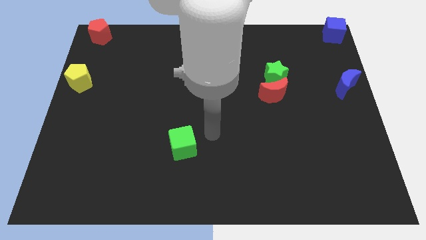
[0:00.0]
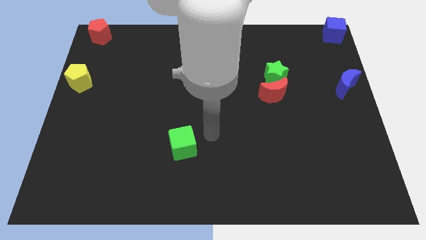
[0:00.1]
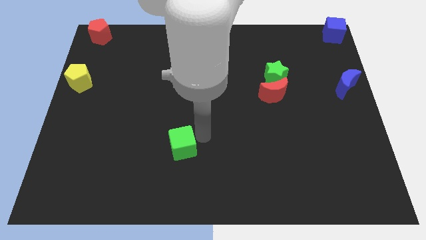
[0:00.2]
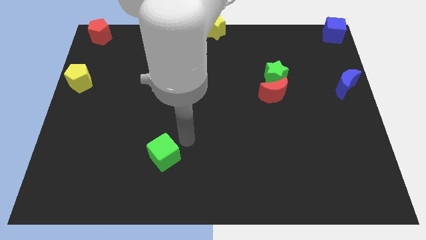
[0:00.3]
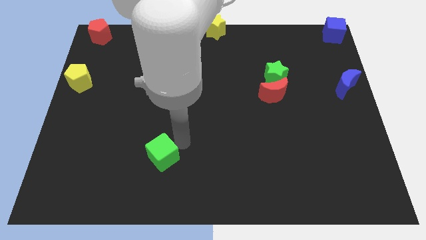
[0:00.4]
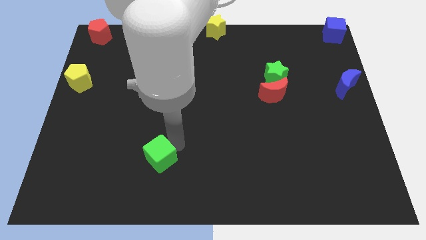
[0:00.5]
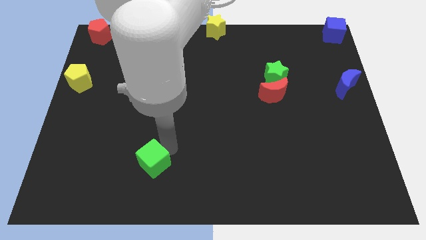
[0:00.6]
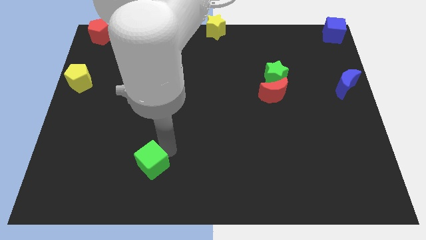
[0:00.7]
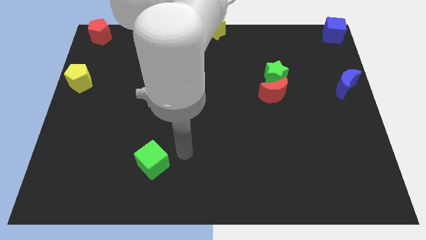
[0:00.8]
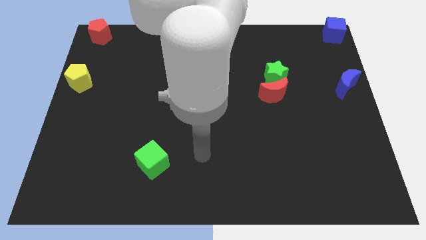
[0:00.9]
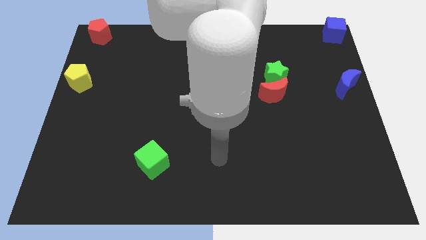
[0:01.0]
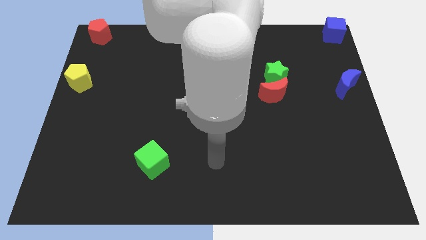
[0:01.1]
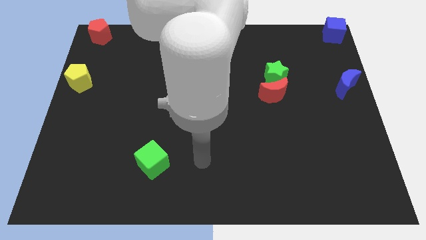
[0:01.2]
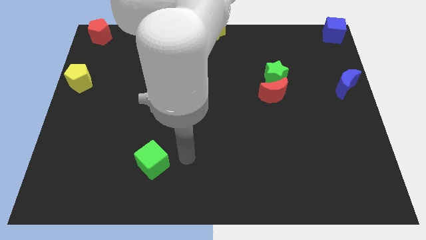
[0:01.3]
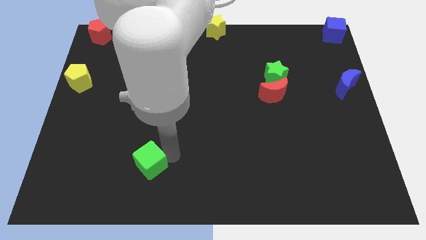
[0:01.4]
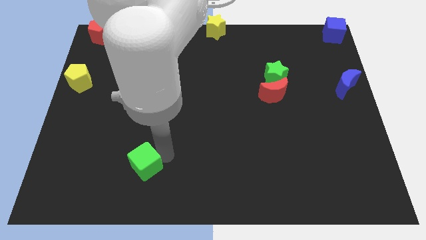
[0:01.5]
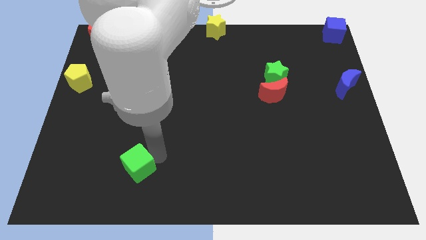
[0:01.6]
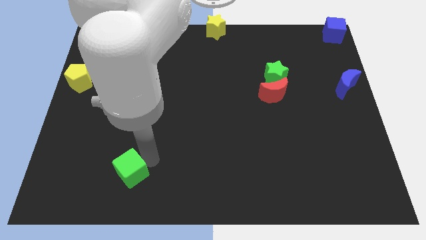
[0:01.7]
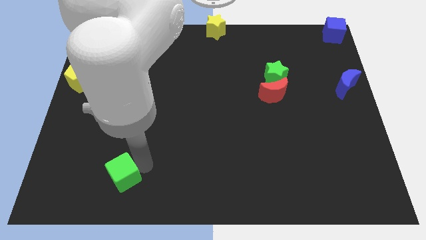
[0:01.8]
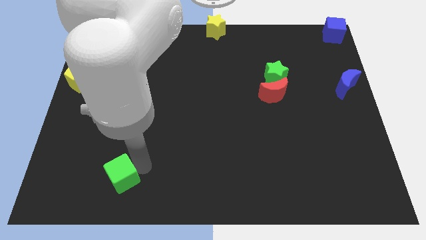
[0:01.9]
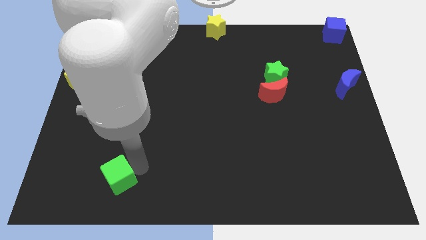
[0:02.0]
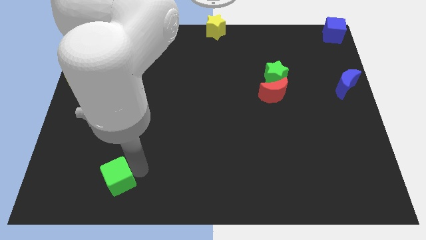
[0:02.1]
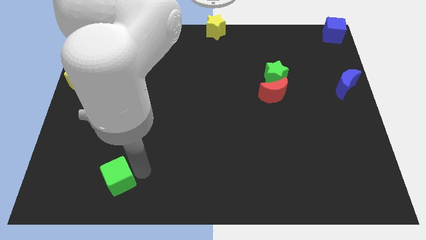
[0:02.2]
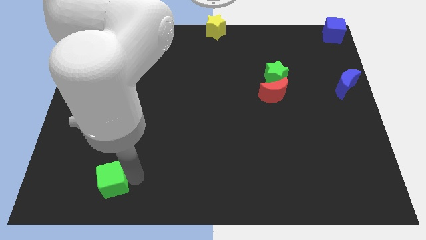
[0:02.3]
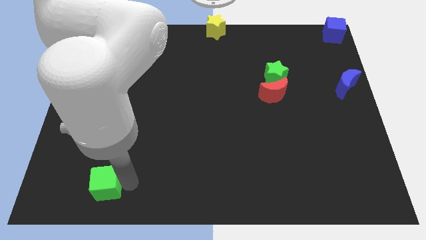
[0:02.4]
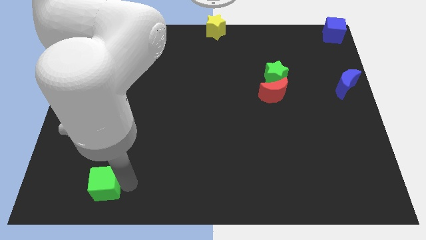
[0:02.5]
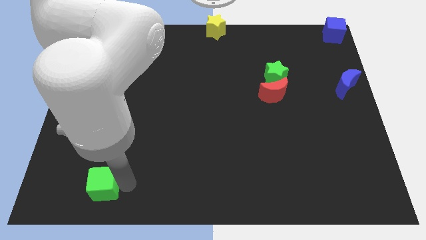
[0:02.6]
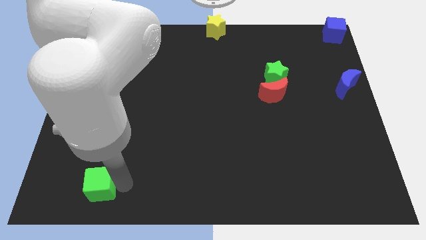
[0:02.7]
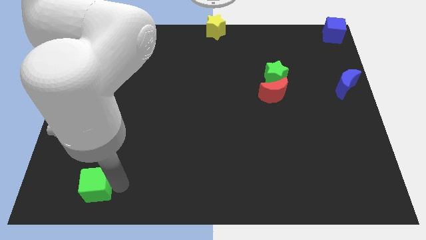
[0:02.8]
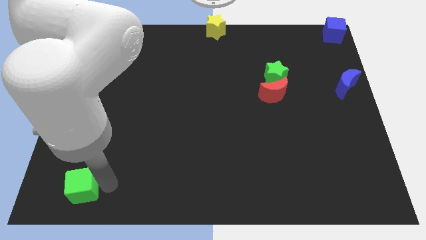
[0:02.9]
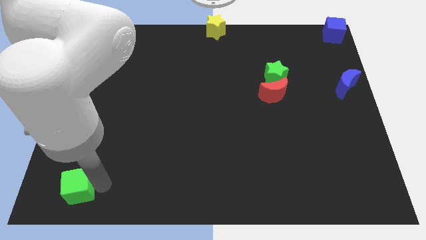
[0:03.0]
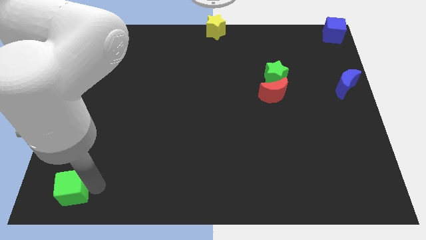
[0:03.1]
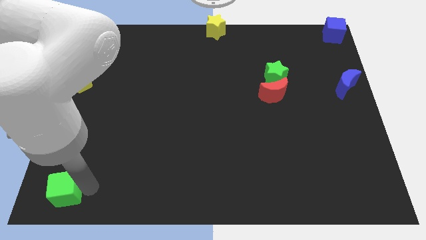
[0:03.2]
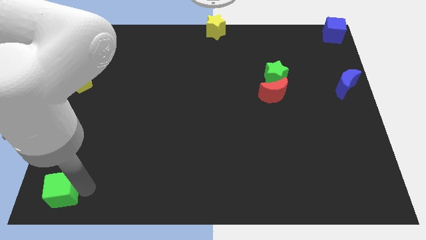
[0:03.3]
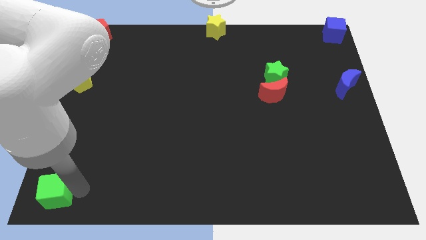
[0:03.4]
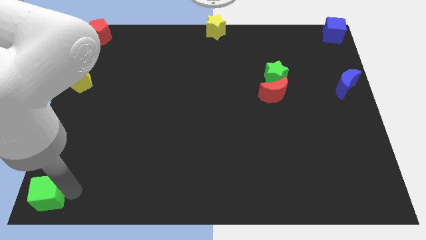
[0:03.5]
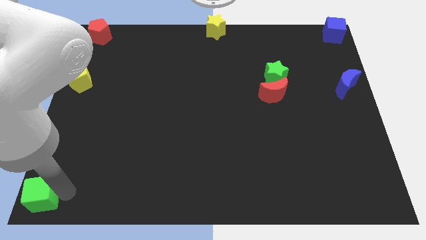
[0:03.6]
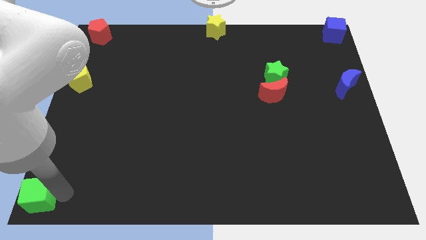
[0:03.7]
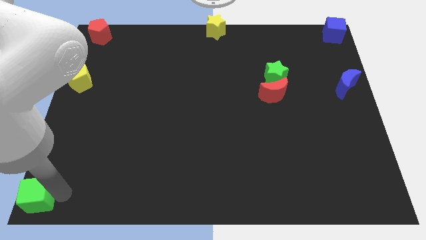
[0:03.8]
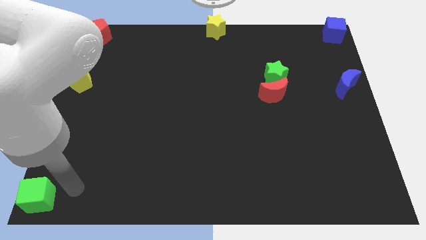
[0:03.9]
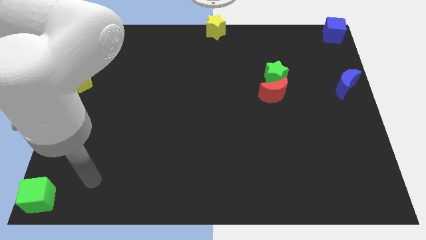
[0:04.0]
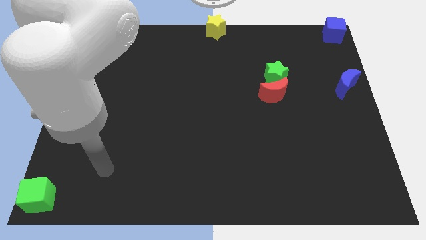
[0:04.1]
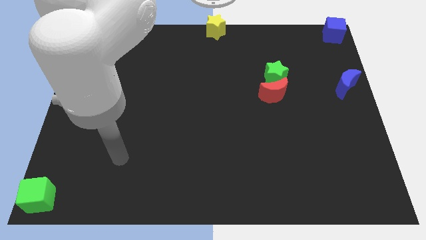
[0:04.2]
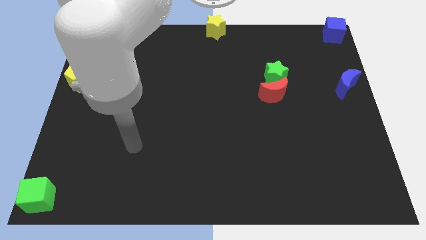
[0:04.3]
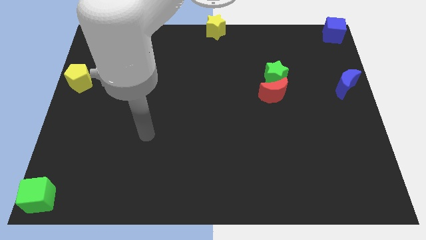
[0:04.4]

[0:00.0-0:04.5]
push the green cube to the bottom left corner

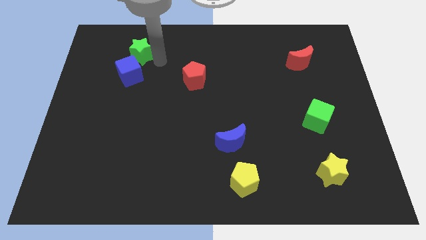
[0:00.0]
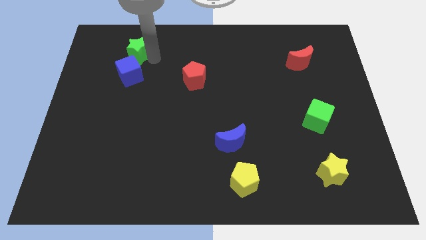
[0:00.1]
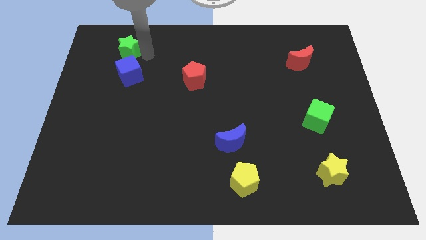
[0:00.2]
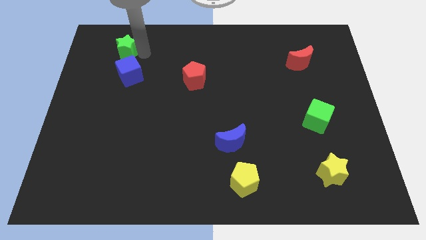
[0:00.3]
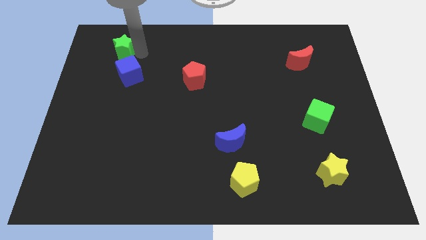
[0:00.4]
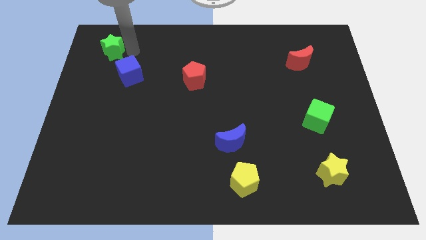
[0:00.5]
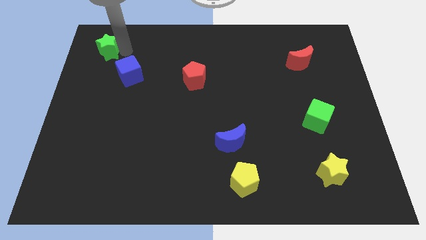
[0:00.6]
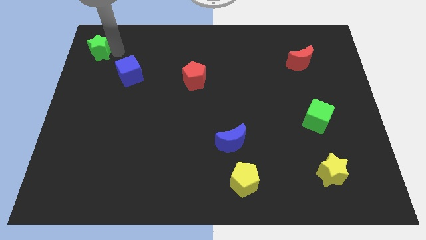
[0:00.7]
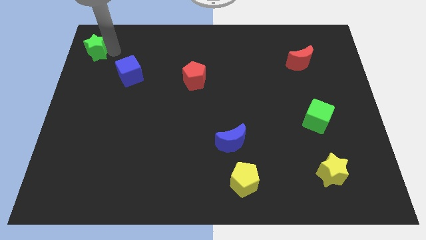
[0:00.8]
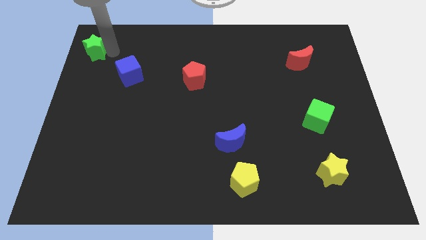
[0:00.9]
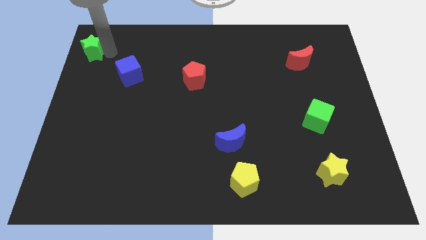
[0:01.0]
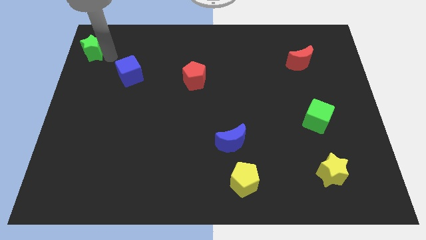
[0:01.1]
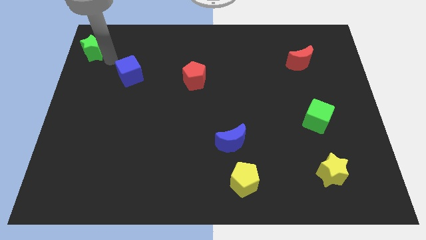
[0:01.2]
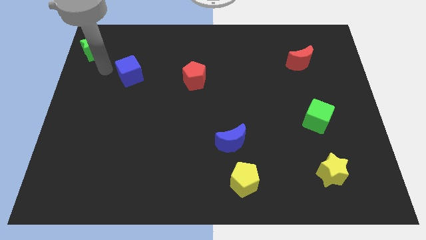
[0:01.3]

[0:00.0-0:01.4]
push the green star away from the blue cube

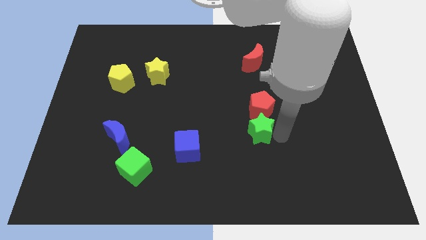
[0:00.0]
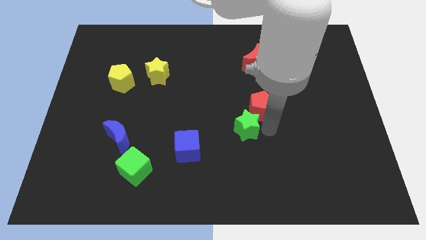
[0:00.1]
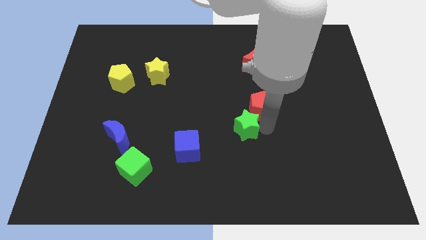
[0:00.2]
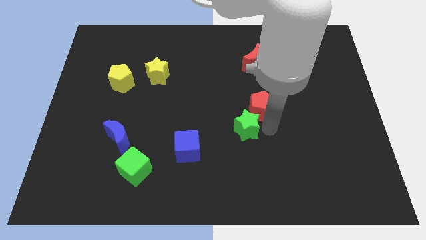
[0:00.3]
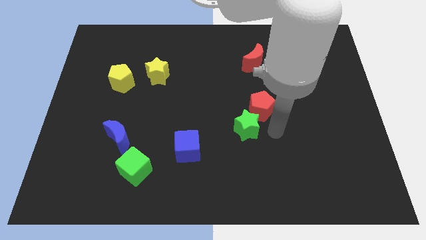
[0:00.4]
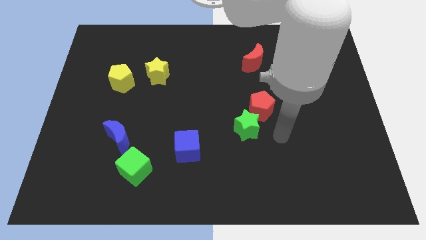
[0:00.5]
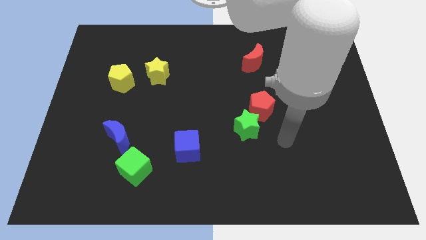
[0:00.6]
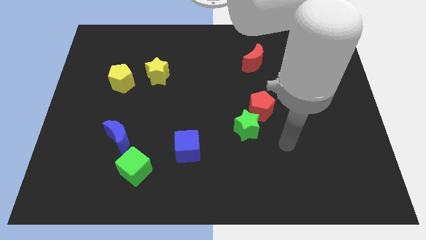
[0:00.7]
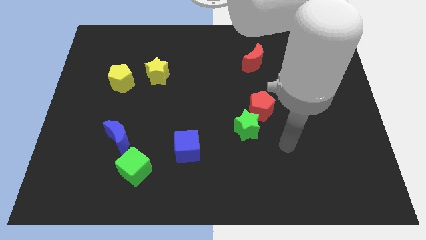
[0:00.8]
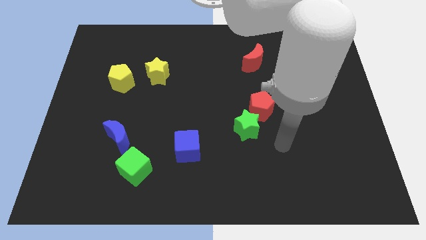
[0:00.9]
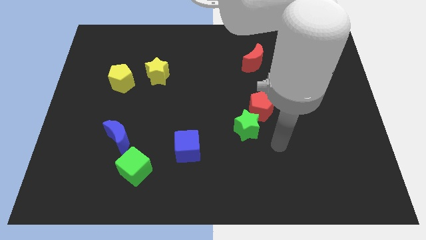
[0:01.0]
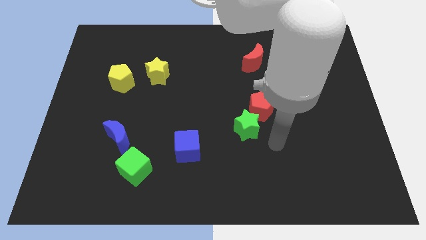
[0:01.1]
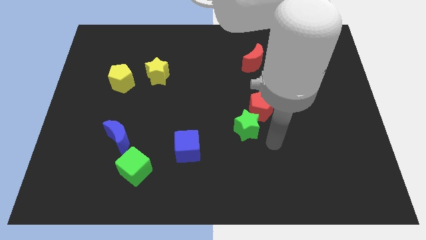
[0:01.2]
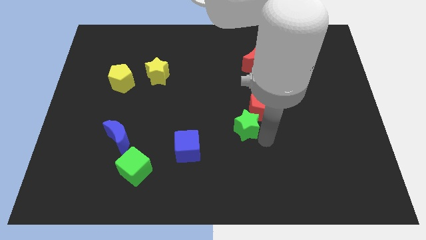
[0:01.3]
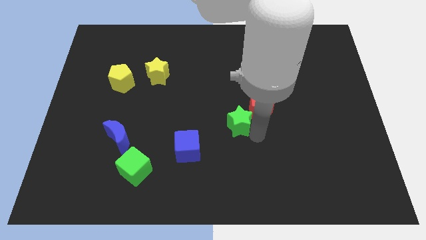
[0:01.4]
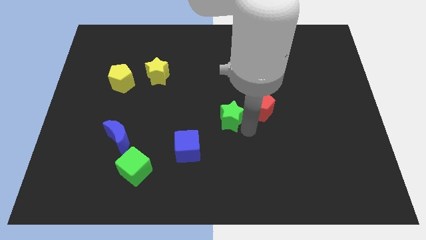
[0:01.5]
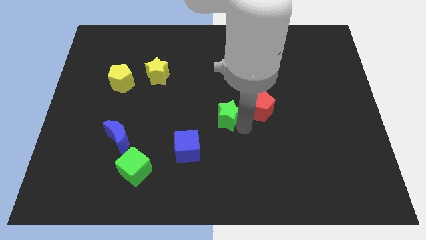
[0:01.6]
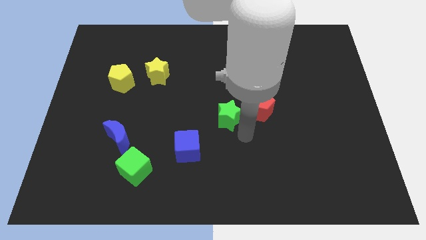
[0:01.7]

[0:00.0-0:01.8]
place the green star left to the red pentagon

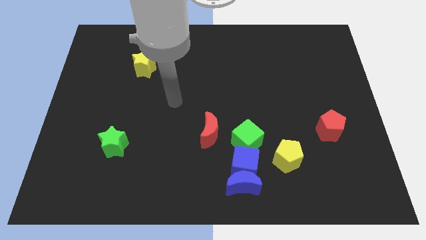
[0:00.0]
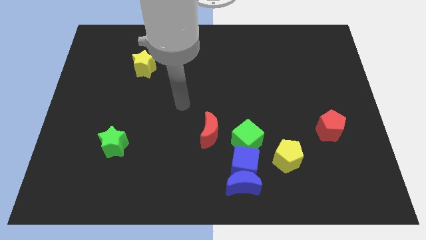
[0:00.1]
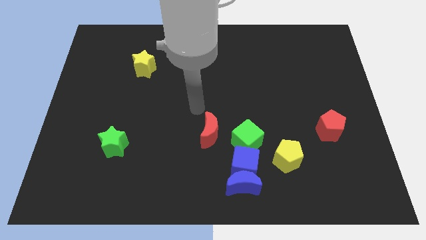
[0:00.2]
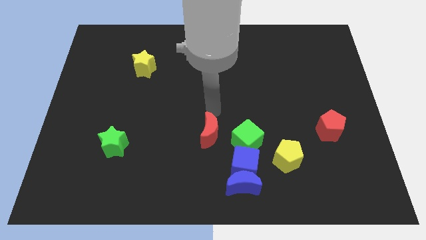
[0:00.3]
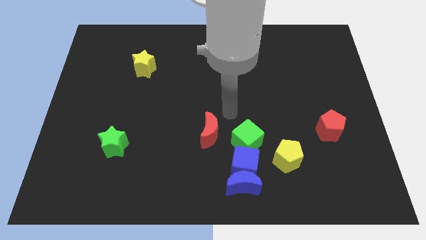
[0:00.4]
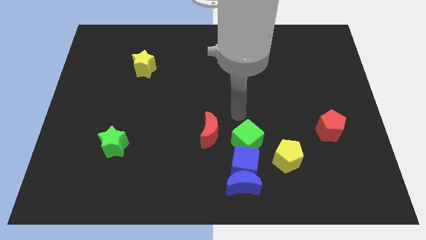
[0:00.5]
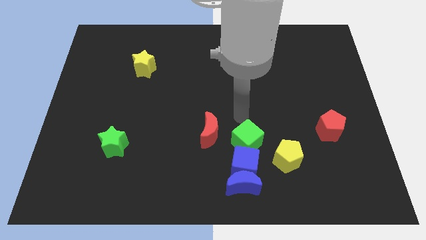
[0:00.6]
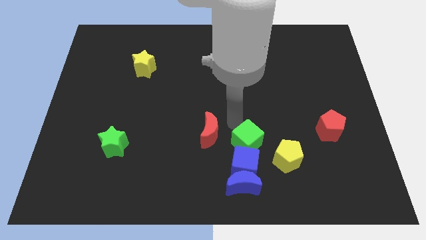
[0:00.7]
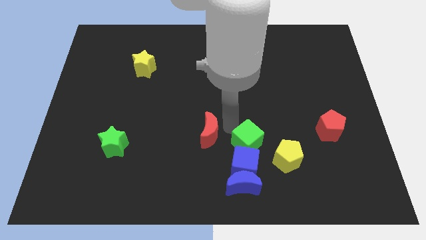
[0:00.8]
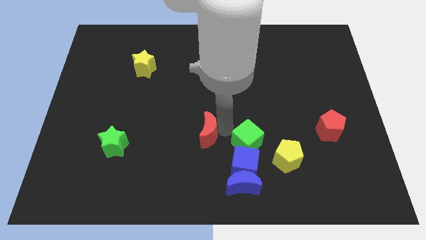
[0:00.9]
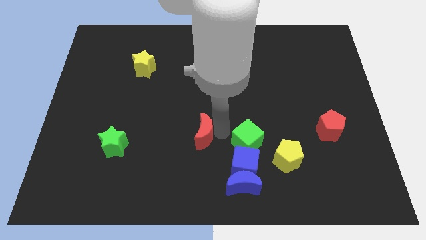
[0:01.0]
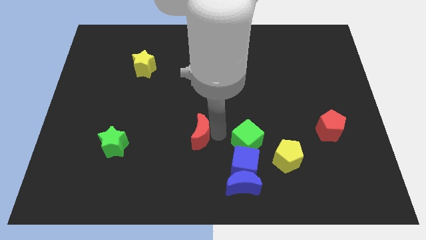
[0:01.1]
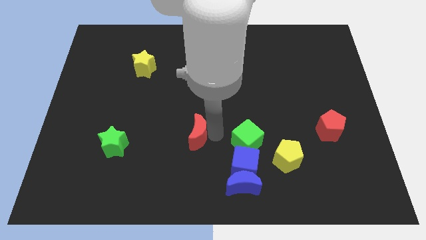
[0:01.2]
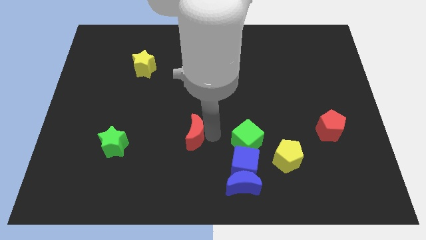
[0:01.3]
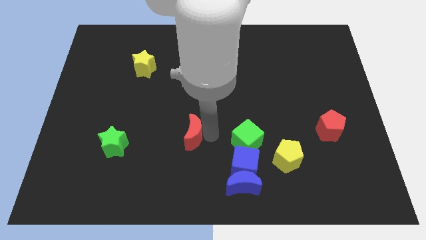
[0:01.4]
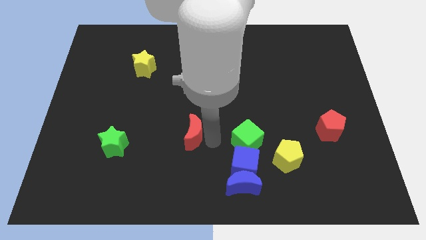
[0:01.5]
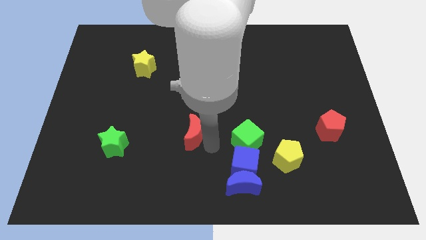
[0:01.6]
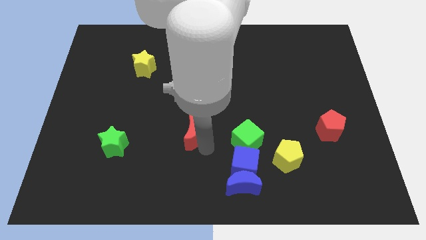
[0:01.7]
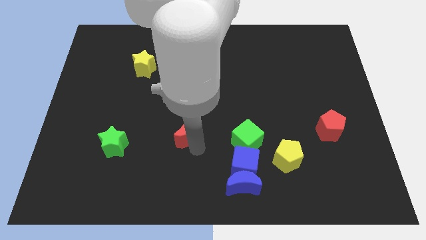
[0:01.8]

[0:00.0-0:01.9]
move the red moon slightly to the left
